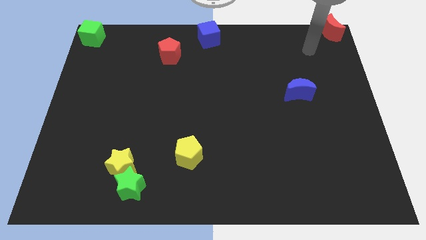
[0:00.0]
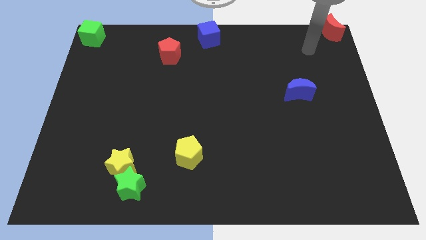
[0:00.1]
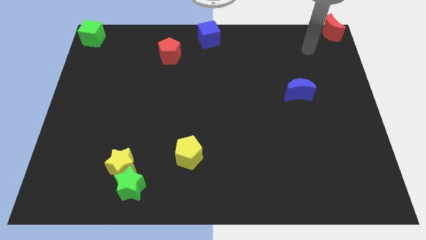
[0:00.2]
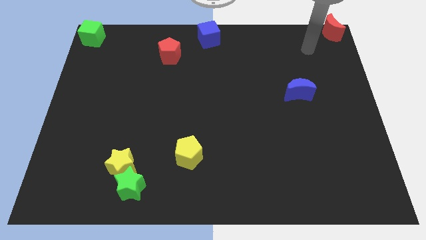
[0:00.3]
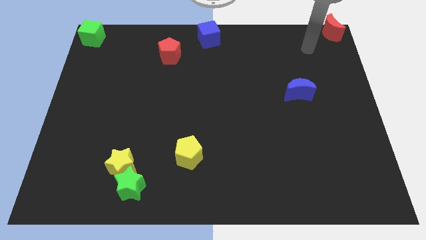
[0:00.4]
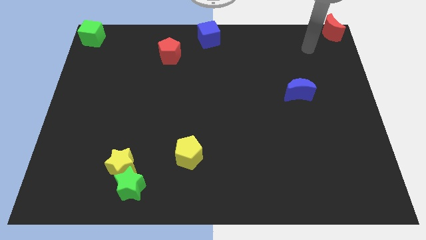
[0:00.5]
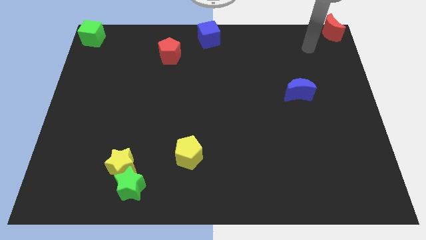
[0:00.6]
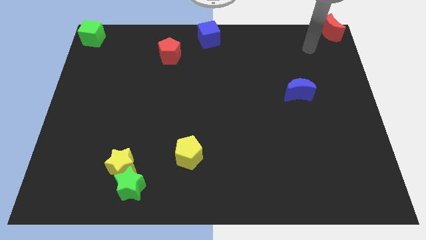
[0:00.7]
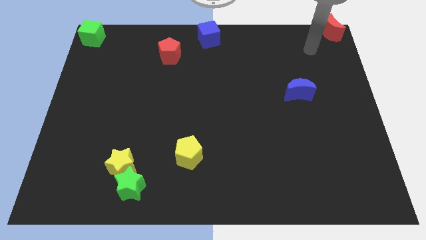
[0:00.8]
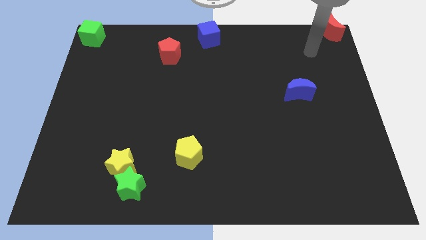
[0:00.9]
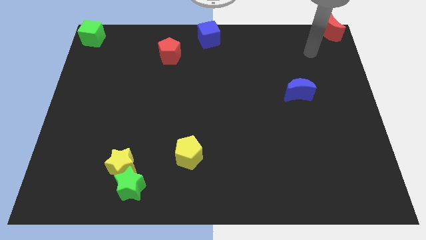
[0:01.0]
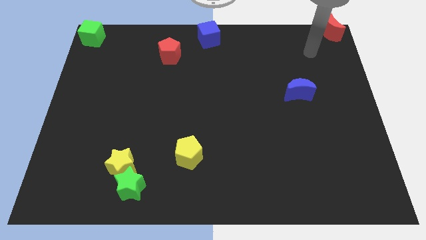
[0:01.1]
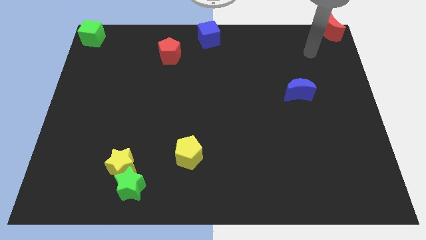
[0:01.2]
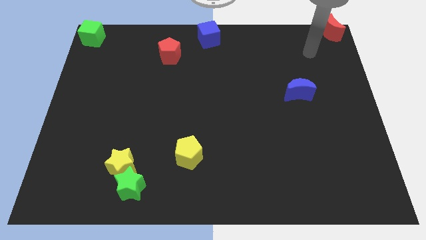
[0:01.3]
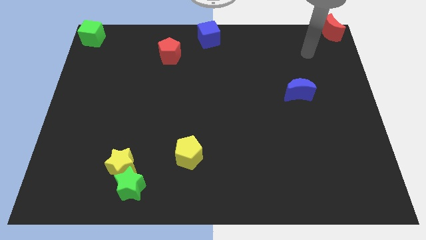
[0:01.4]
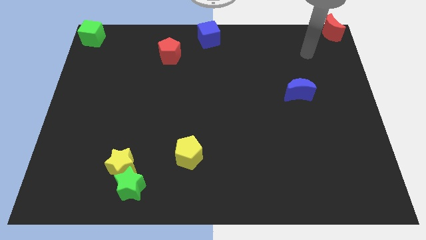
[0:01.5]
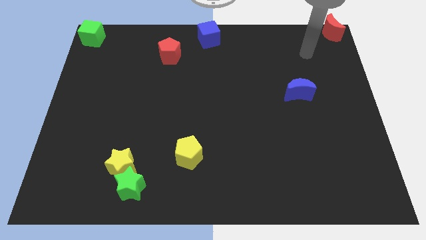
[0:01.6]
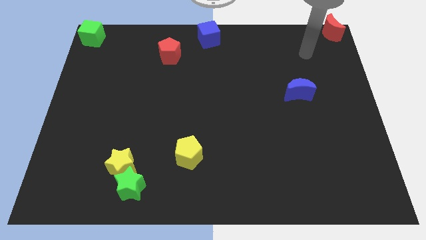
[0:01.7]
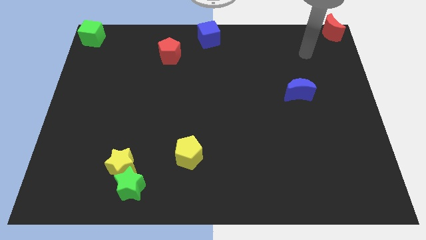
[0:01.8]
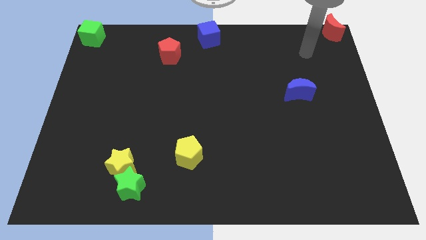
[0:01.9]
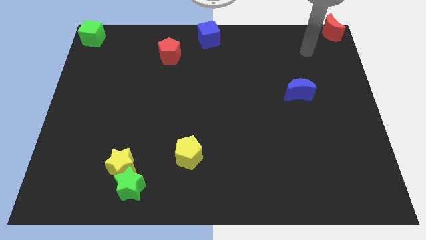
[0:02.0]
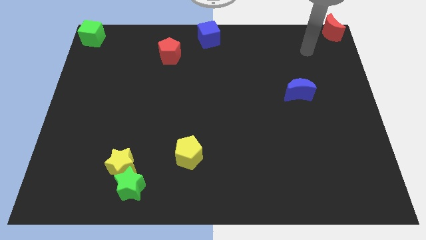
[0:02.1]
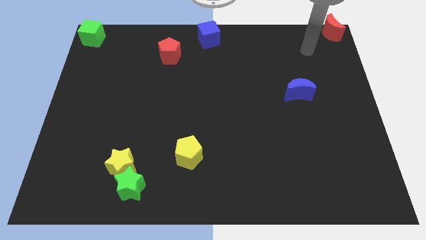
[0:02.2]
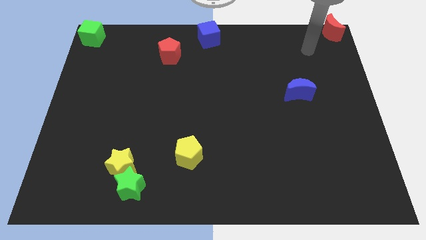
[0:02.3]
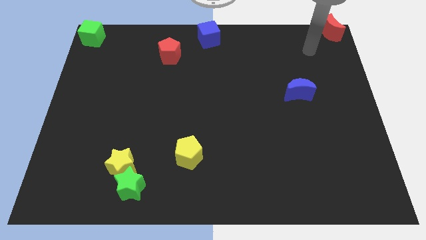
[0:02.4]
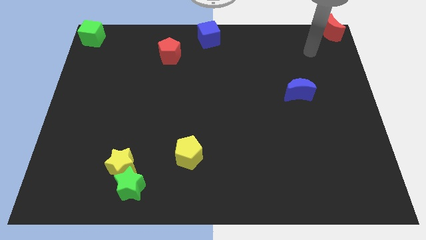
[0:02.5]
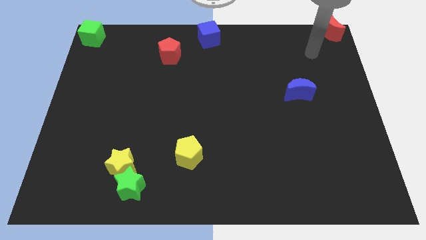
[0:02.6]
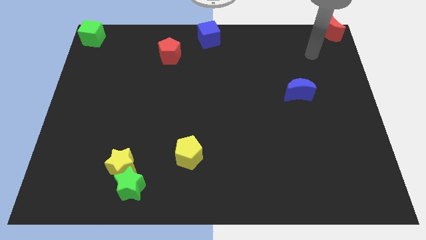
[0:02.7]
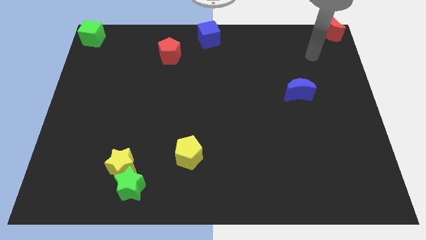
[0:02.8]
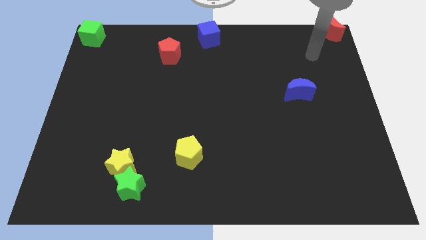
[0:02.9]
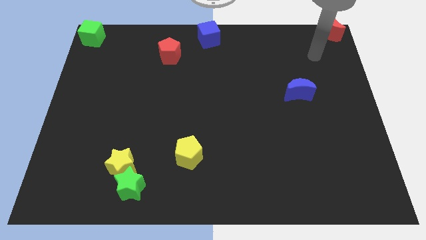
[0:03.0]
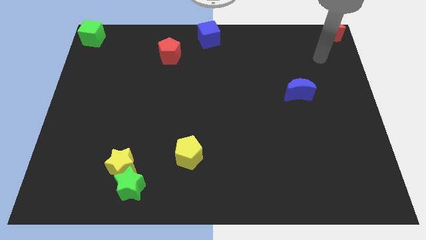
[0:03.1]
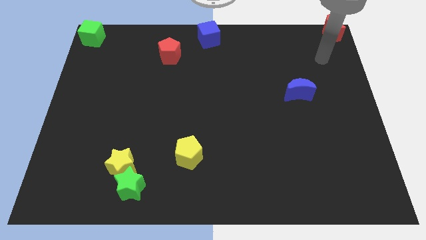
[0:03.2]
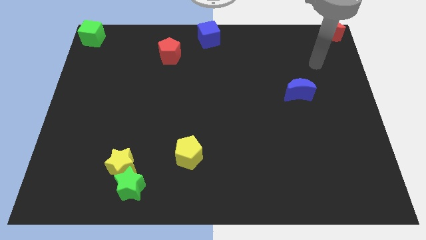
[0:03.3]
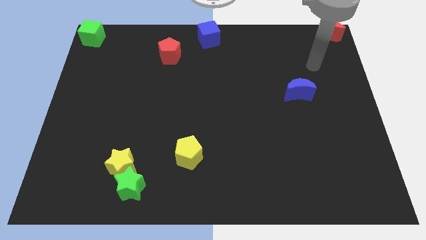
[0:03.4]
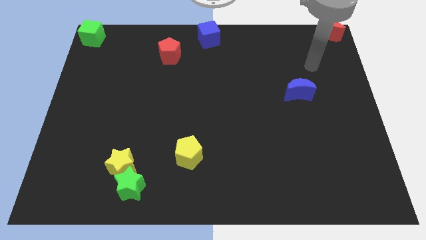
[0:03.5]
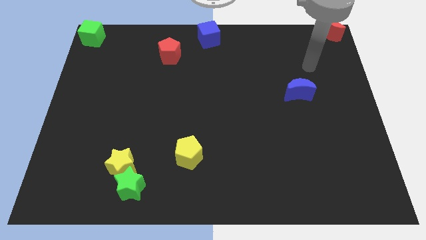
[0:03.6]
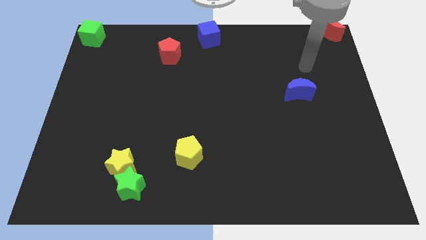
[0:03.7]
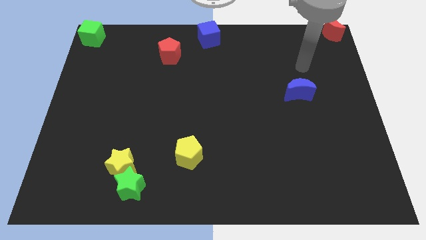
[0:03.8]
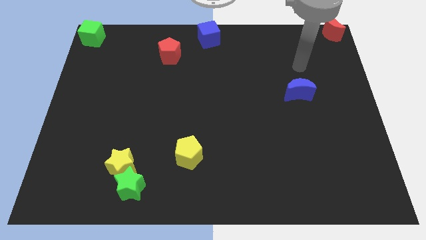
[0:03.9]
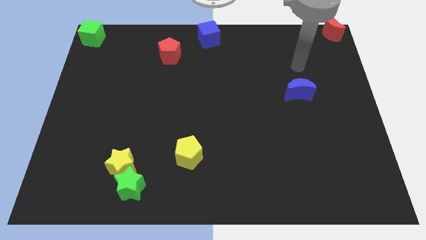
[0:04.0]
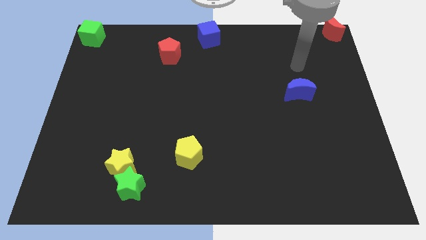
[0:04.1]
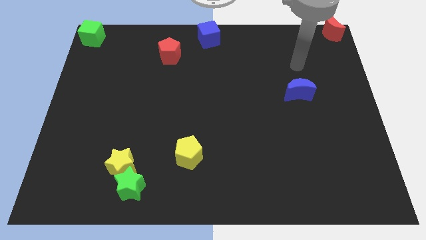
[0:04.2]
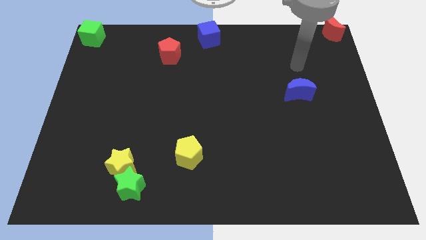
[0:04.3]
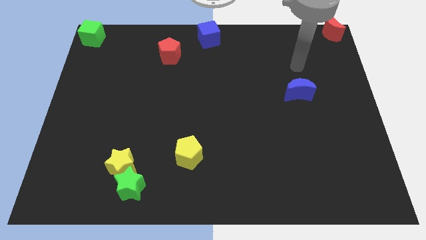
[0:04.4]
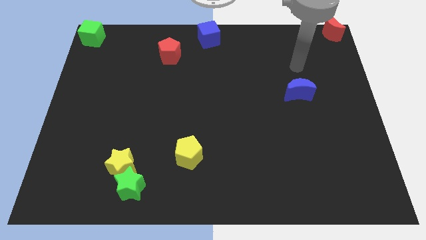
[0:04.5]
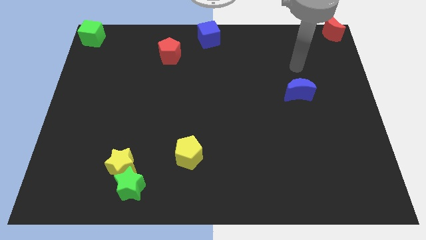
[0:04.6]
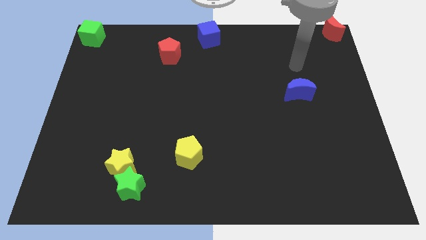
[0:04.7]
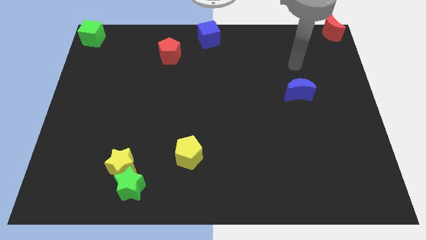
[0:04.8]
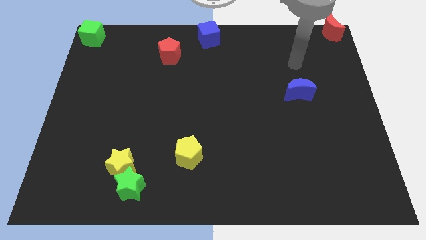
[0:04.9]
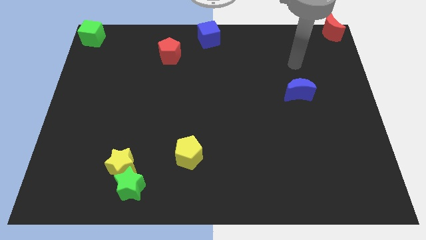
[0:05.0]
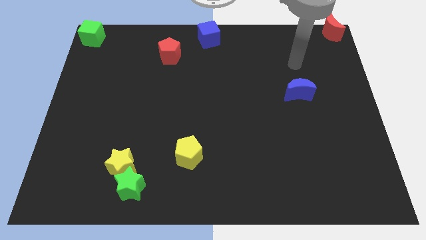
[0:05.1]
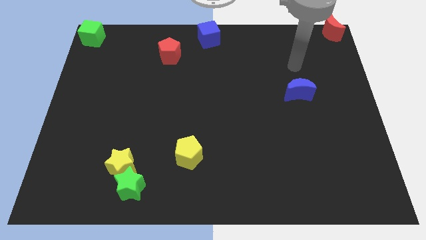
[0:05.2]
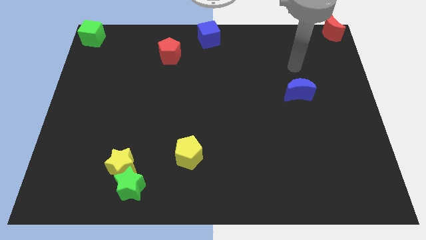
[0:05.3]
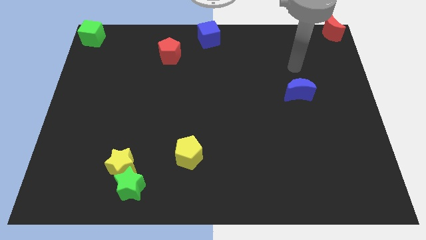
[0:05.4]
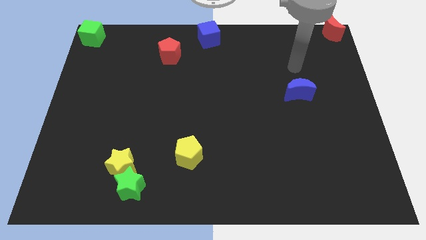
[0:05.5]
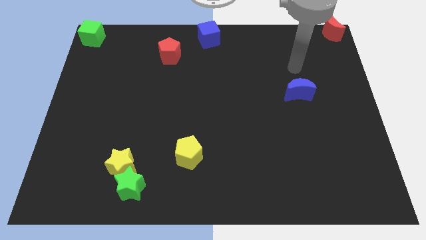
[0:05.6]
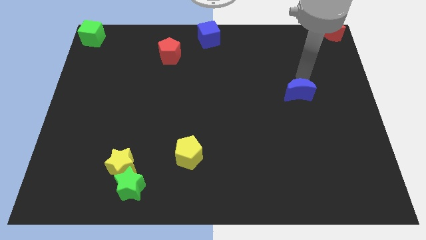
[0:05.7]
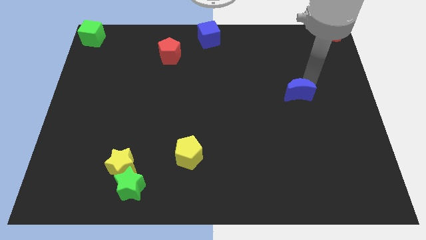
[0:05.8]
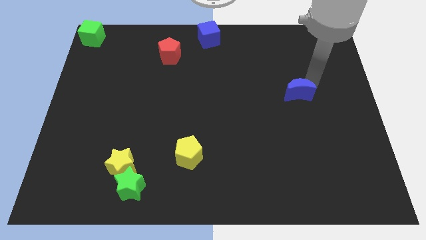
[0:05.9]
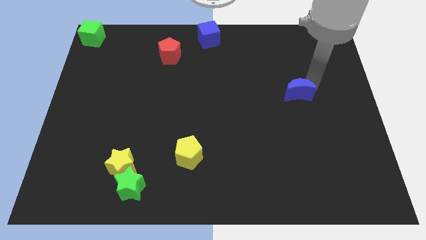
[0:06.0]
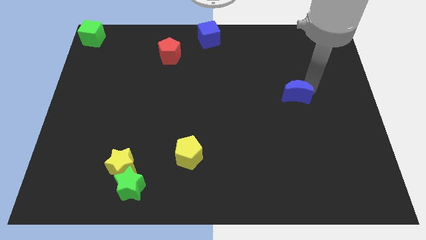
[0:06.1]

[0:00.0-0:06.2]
move arm to the blue moon

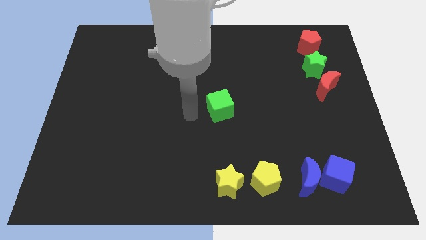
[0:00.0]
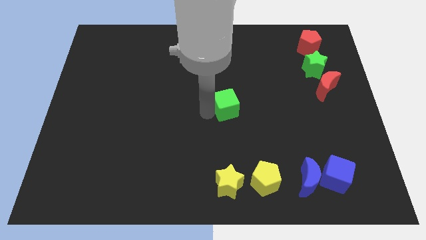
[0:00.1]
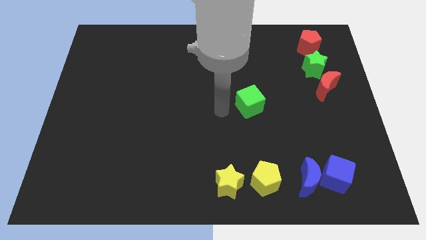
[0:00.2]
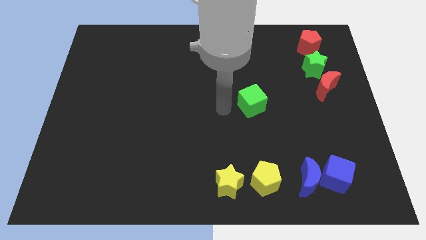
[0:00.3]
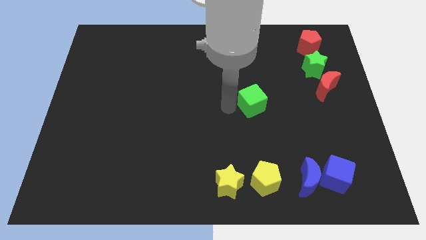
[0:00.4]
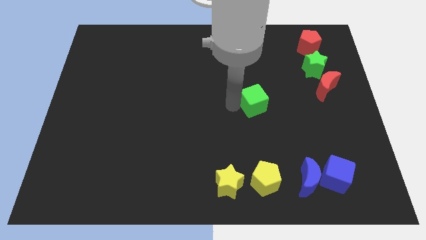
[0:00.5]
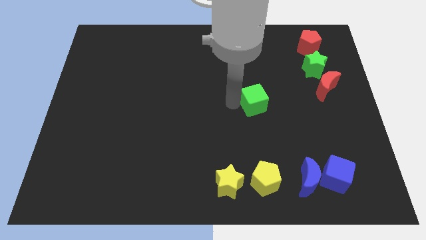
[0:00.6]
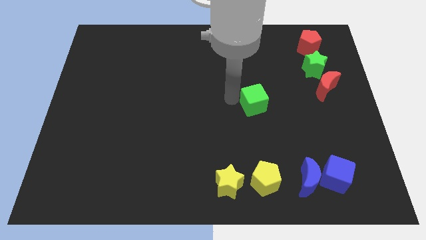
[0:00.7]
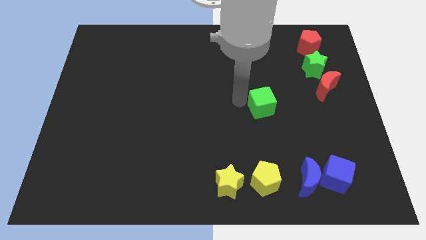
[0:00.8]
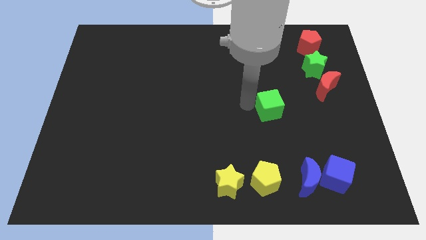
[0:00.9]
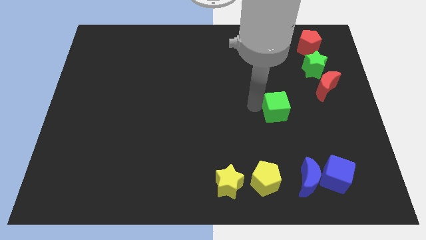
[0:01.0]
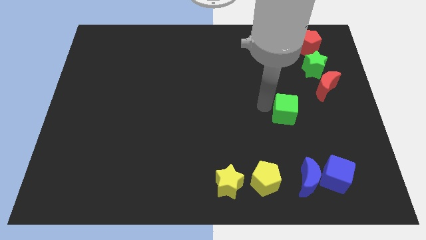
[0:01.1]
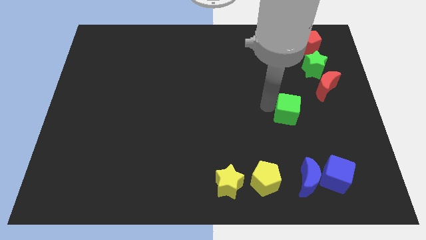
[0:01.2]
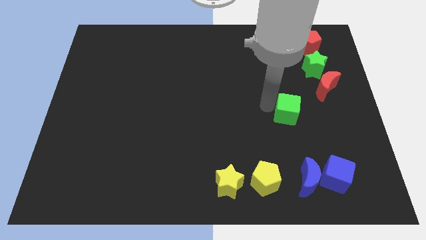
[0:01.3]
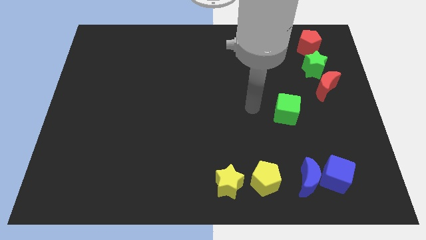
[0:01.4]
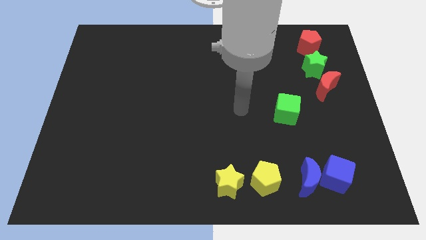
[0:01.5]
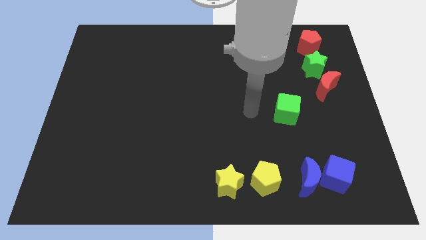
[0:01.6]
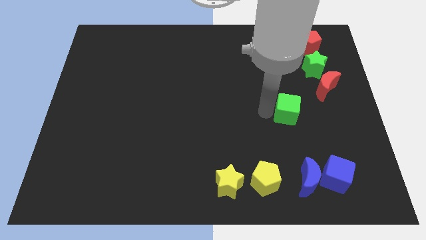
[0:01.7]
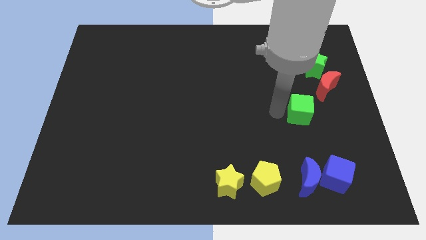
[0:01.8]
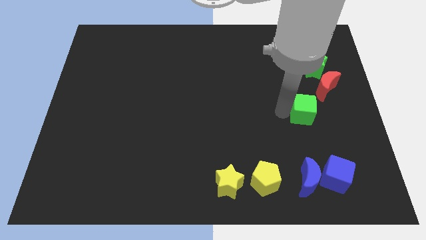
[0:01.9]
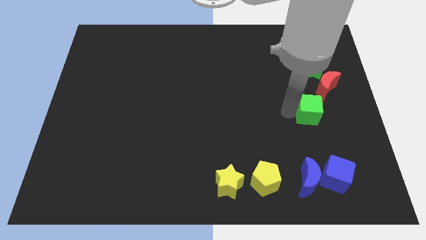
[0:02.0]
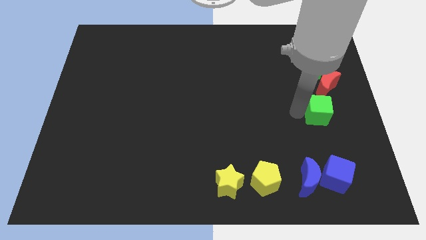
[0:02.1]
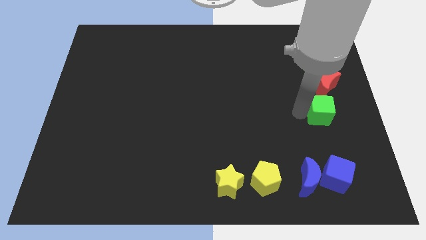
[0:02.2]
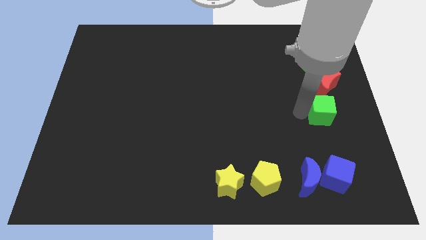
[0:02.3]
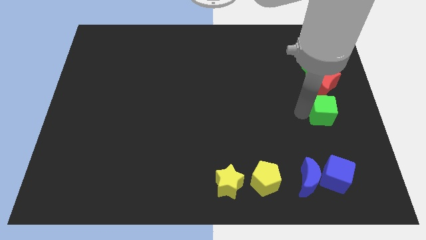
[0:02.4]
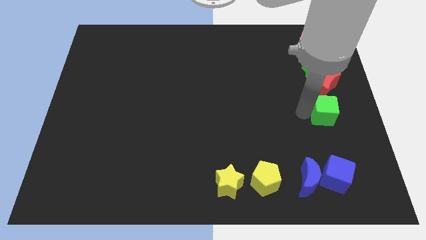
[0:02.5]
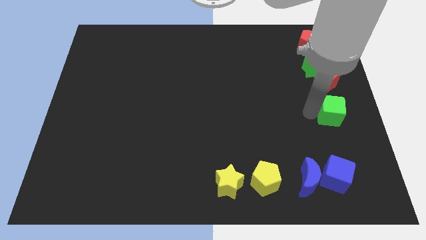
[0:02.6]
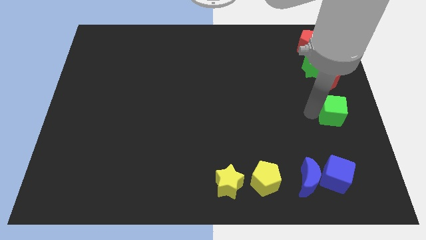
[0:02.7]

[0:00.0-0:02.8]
place green cube at the bottom of red moon
